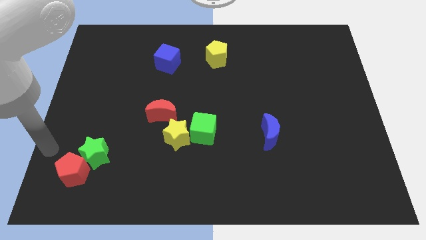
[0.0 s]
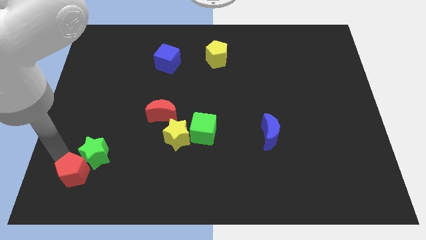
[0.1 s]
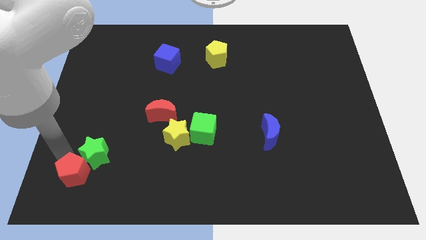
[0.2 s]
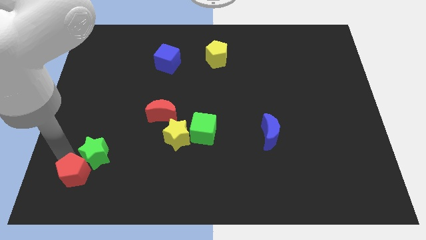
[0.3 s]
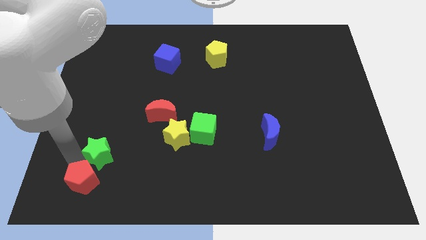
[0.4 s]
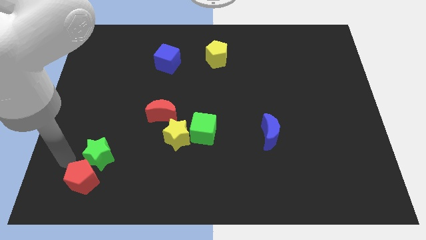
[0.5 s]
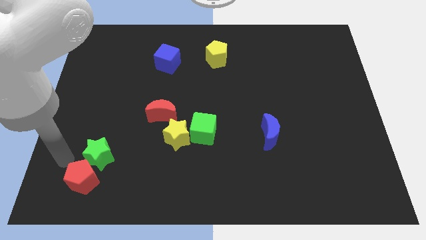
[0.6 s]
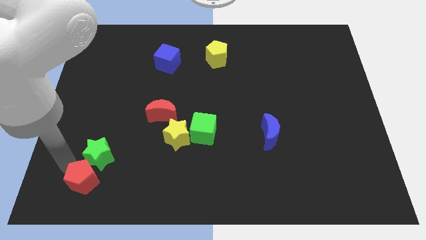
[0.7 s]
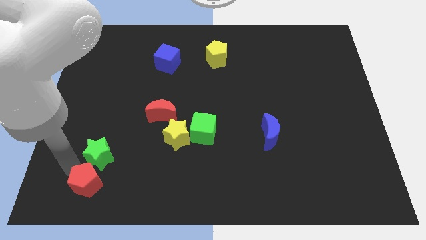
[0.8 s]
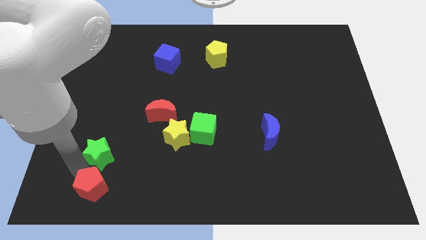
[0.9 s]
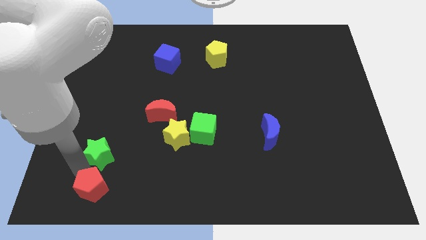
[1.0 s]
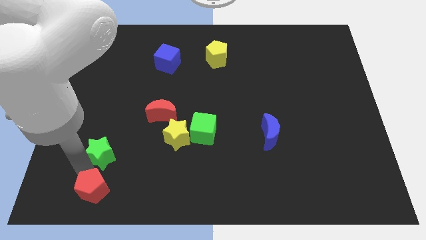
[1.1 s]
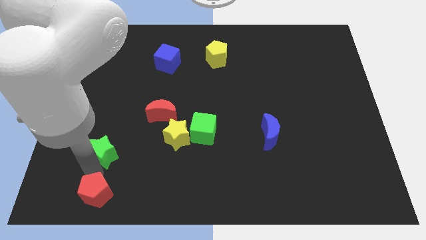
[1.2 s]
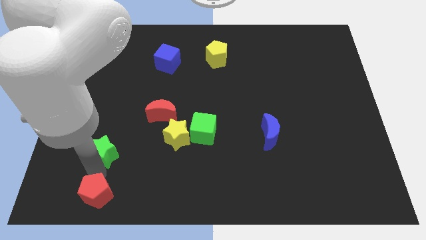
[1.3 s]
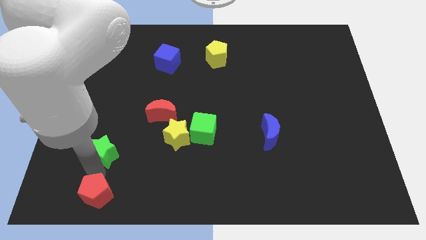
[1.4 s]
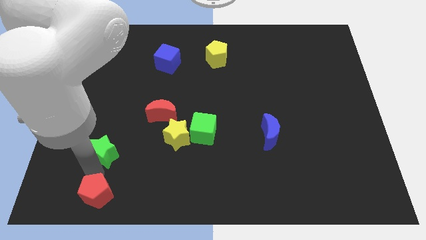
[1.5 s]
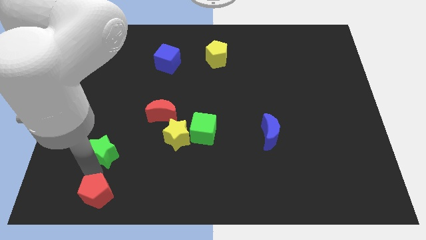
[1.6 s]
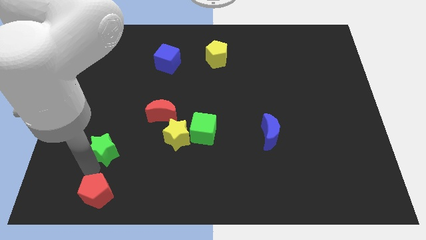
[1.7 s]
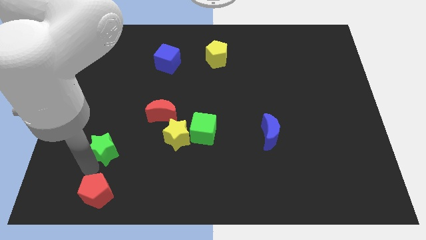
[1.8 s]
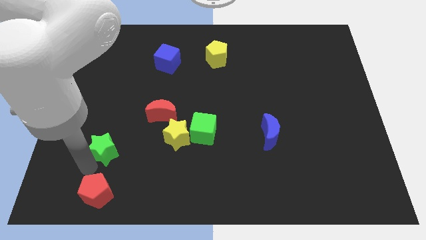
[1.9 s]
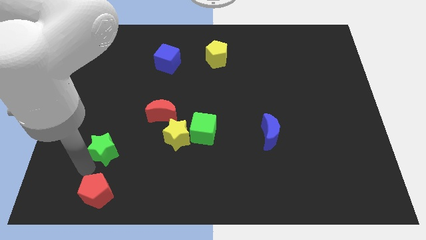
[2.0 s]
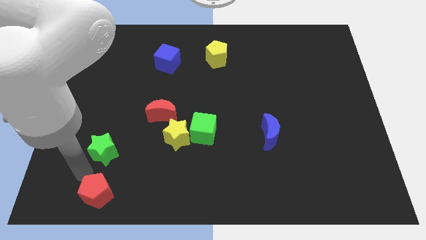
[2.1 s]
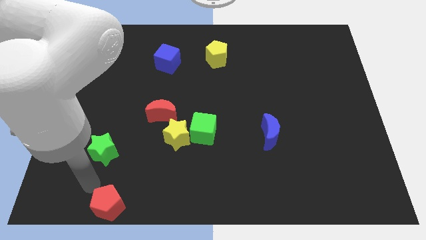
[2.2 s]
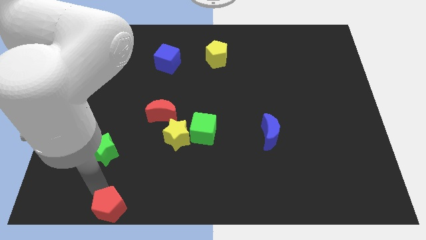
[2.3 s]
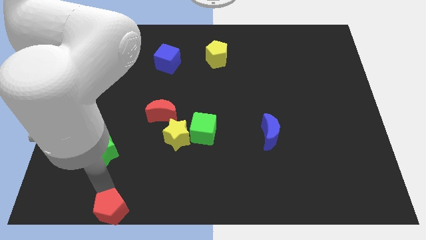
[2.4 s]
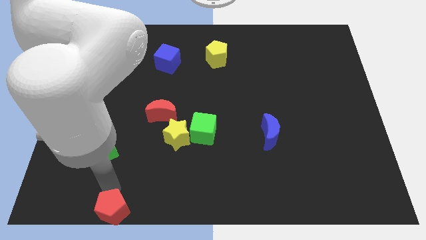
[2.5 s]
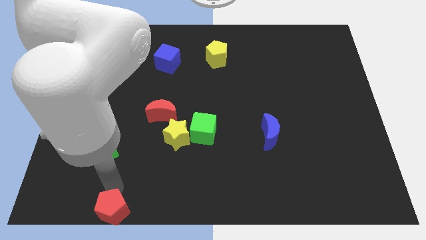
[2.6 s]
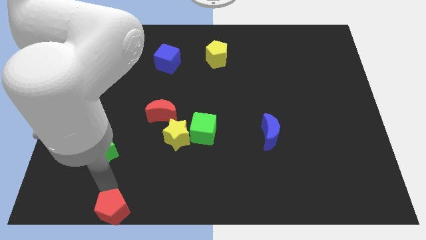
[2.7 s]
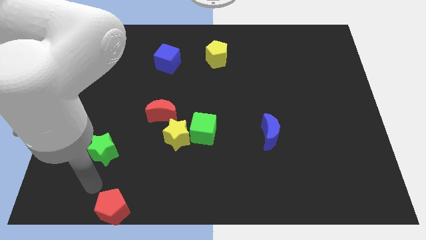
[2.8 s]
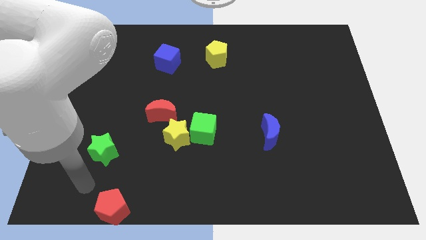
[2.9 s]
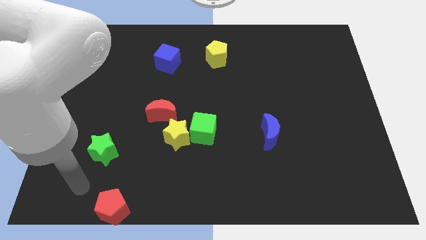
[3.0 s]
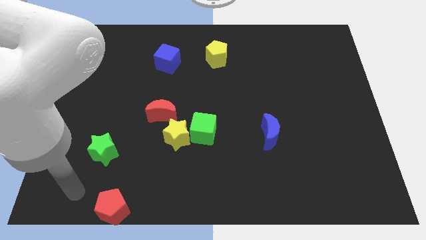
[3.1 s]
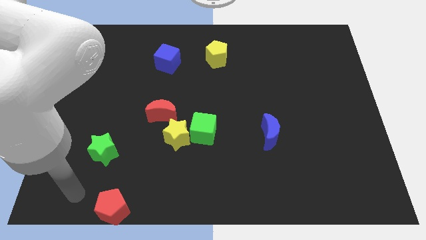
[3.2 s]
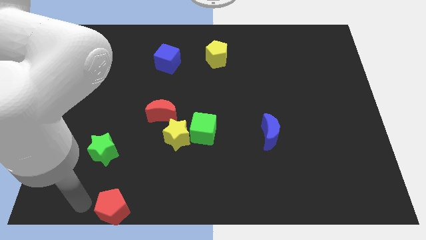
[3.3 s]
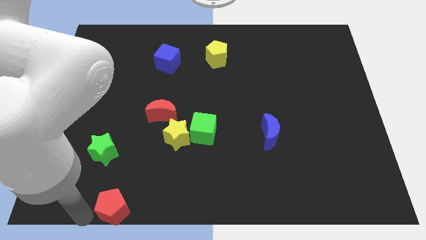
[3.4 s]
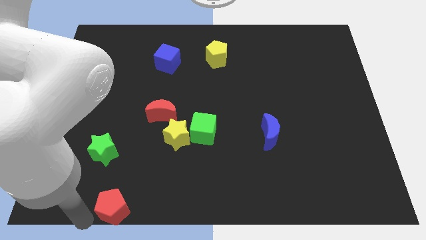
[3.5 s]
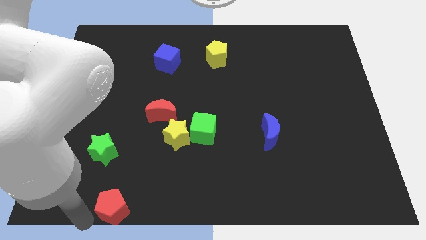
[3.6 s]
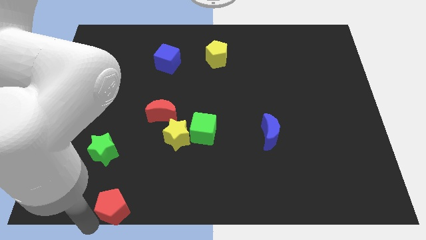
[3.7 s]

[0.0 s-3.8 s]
push the red pentagon to bottom of the green star

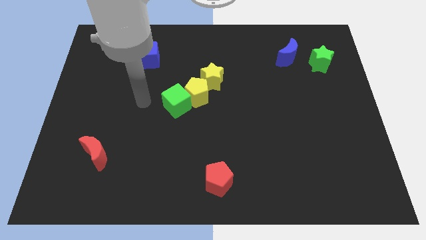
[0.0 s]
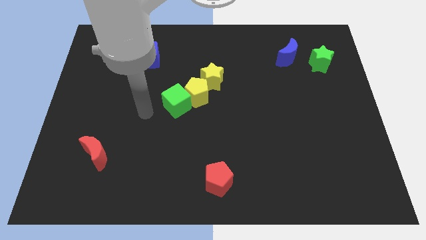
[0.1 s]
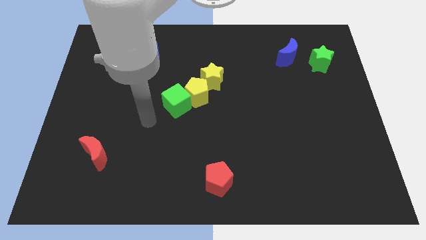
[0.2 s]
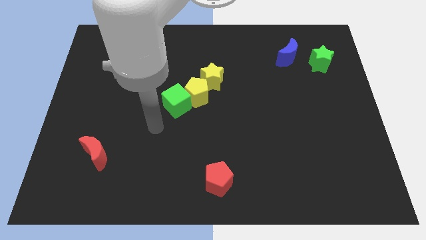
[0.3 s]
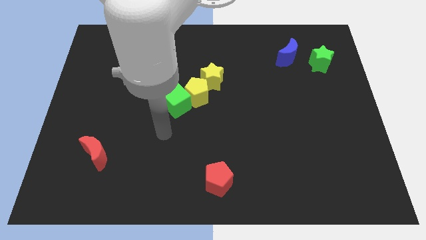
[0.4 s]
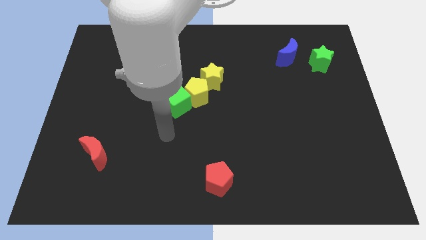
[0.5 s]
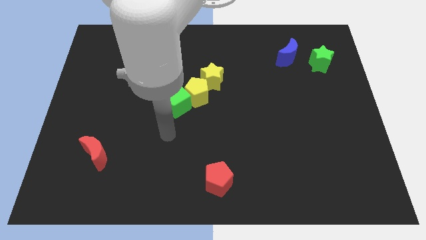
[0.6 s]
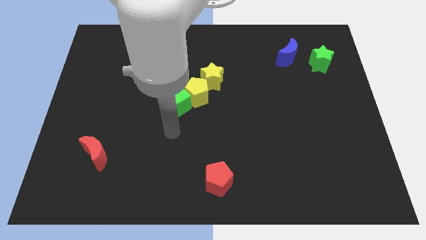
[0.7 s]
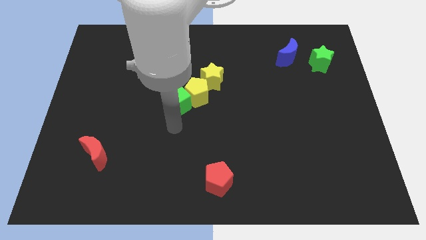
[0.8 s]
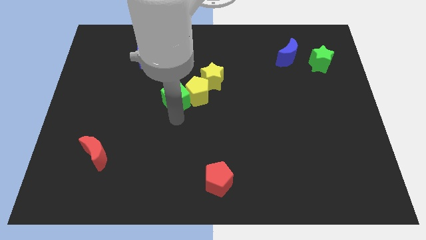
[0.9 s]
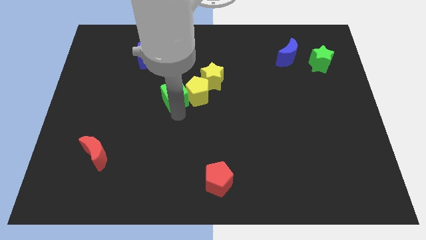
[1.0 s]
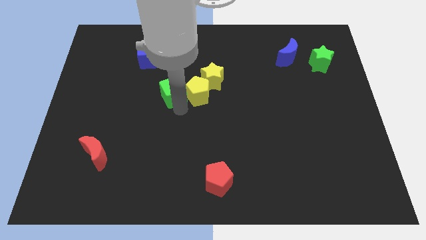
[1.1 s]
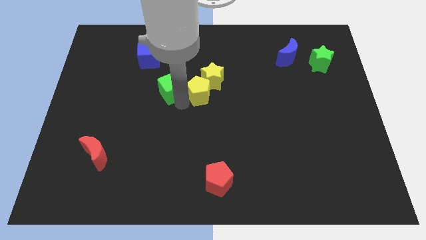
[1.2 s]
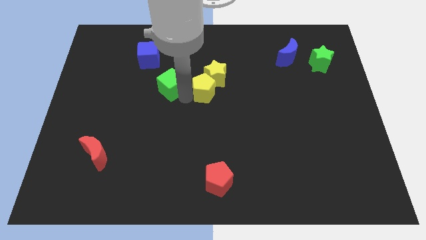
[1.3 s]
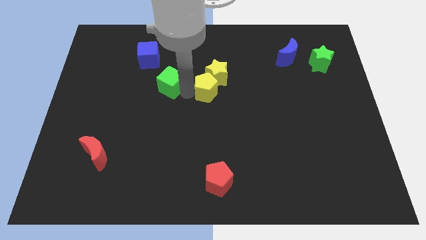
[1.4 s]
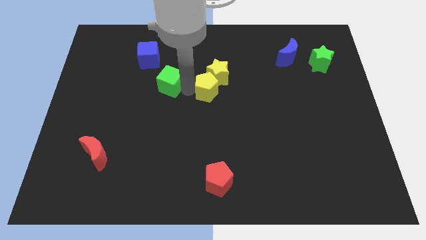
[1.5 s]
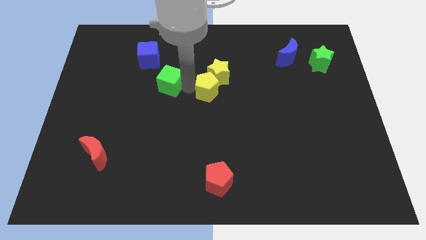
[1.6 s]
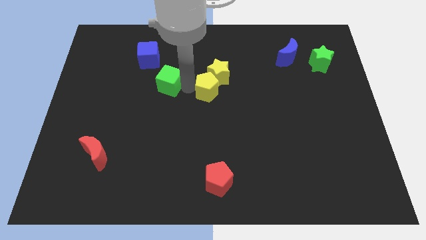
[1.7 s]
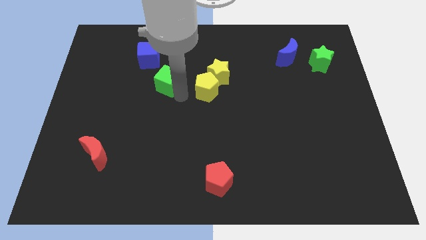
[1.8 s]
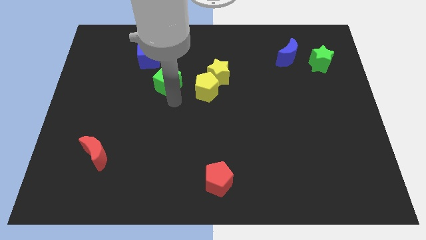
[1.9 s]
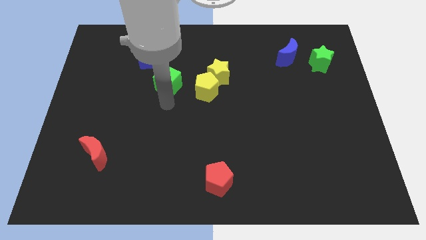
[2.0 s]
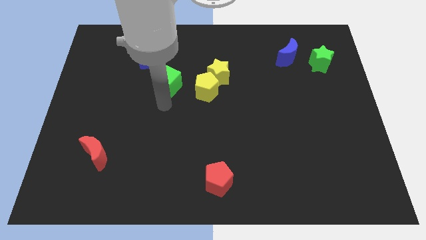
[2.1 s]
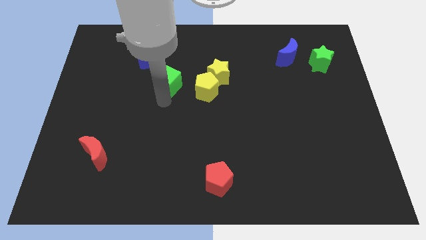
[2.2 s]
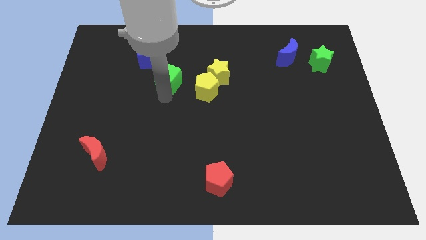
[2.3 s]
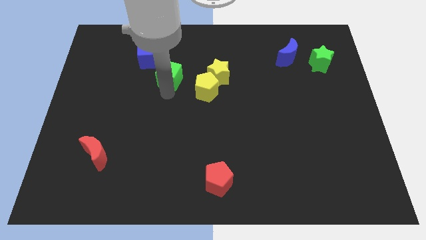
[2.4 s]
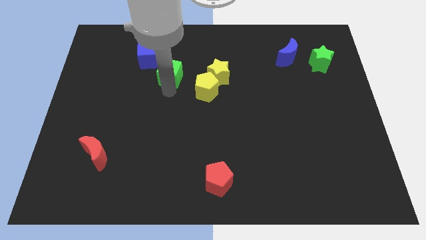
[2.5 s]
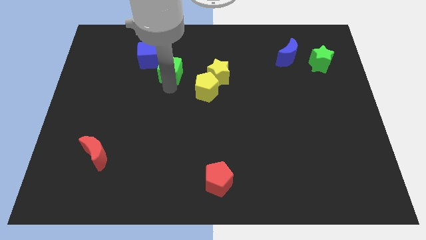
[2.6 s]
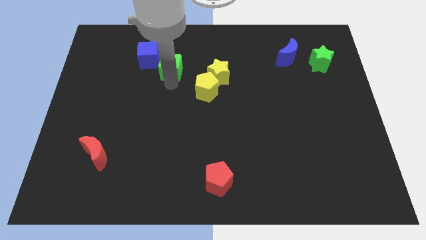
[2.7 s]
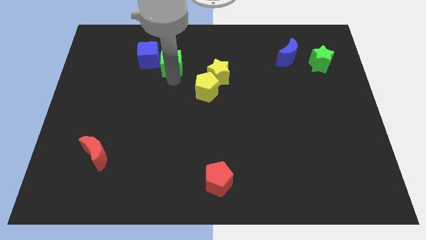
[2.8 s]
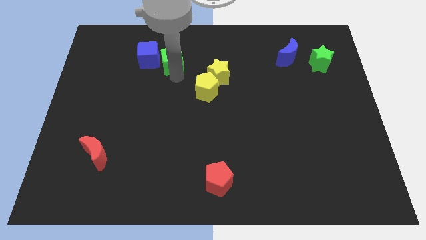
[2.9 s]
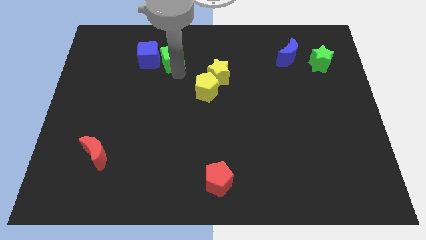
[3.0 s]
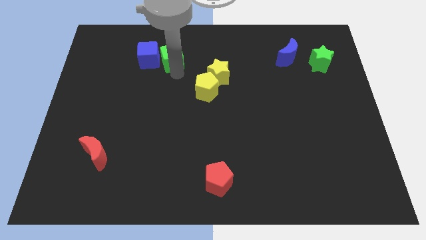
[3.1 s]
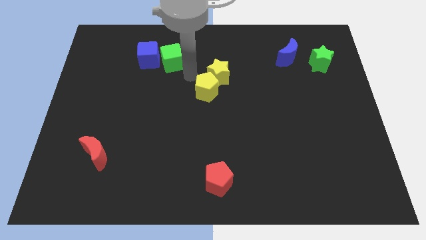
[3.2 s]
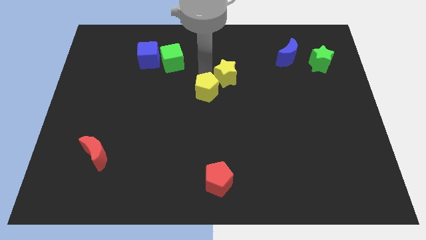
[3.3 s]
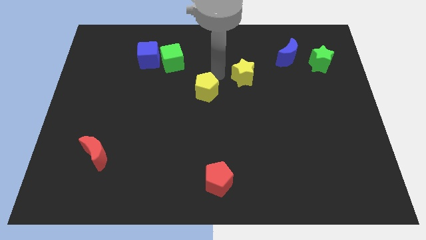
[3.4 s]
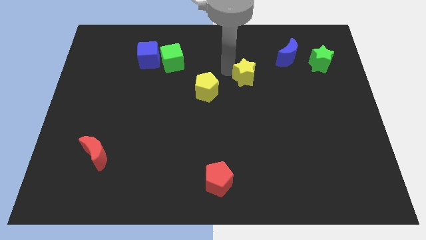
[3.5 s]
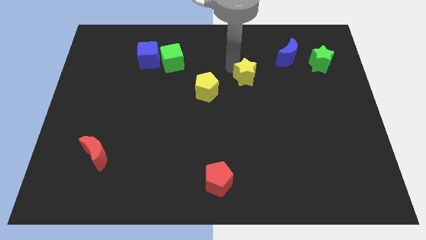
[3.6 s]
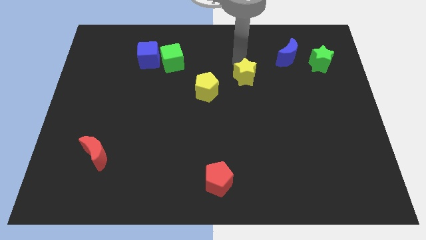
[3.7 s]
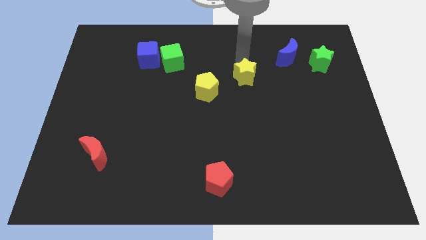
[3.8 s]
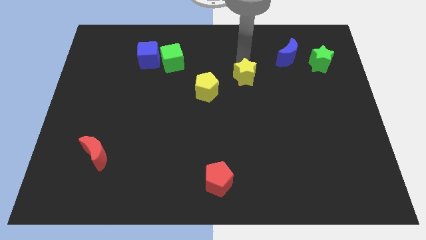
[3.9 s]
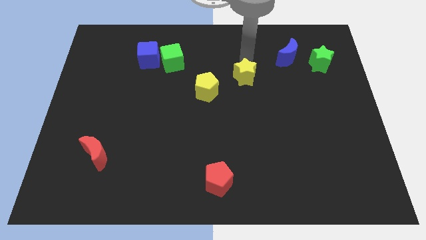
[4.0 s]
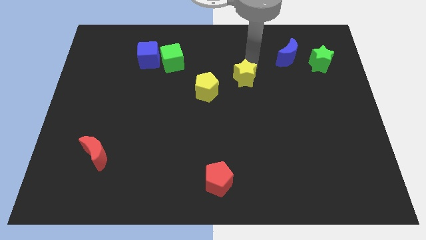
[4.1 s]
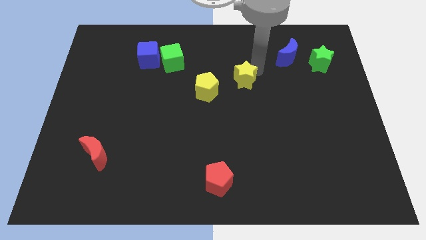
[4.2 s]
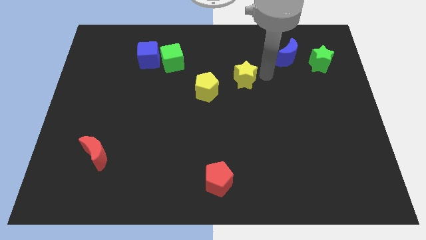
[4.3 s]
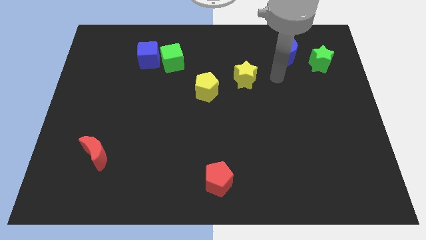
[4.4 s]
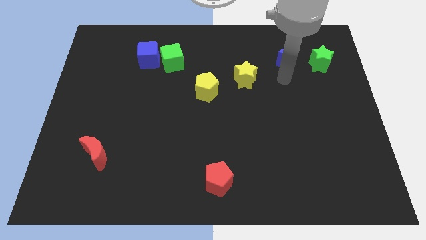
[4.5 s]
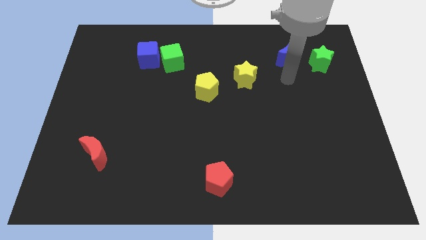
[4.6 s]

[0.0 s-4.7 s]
separate green cube and yellow star from the yellow pentagon

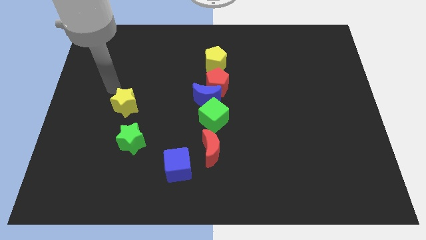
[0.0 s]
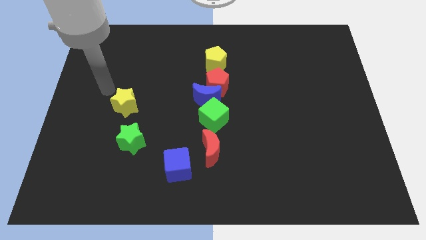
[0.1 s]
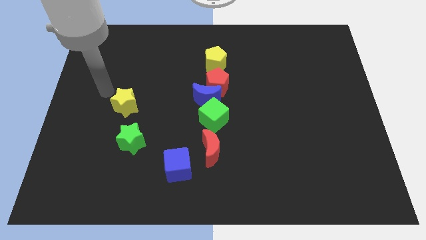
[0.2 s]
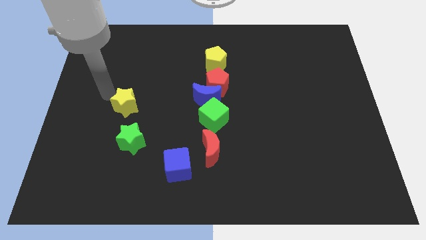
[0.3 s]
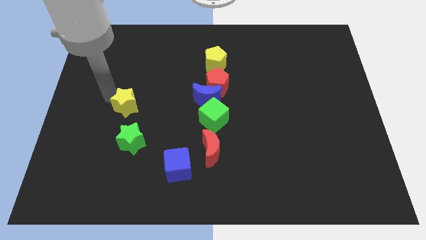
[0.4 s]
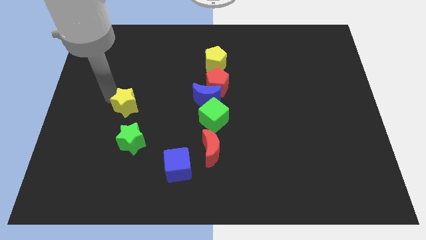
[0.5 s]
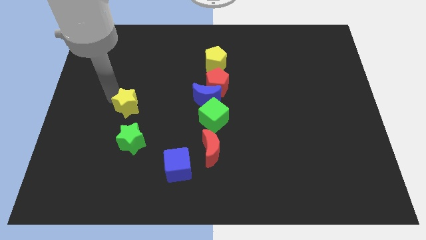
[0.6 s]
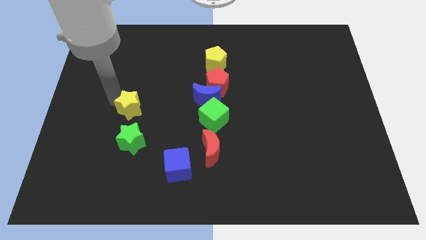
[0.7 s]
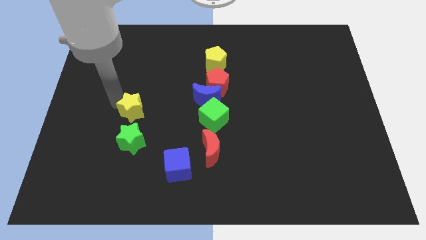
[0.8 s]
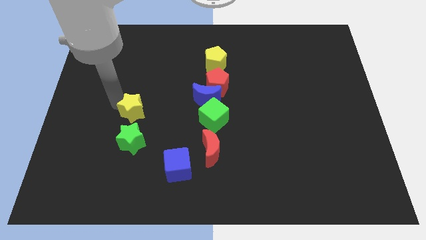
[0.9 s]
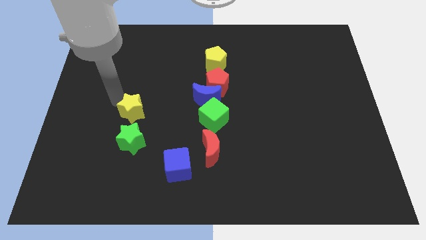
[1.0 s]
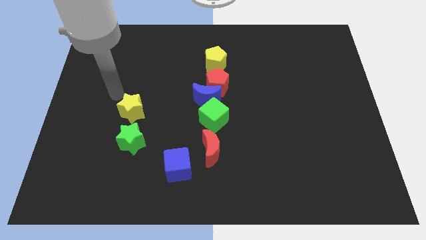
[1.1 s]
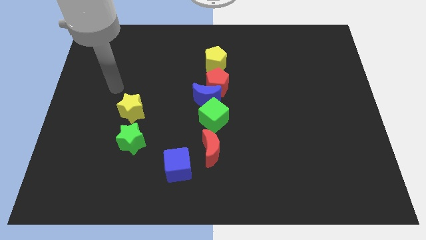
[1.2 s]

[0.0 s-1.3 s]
move the yellow star above the green star
